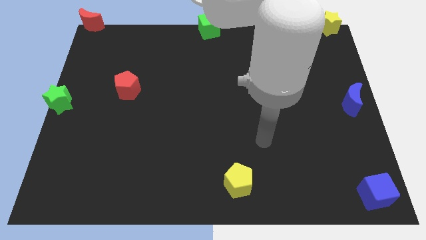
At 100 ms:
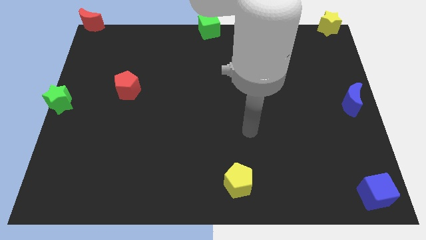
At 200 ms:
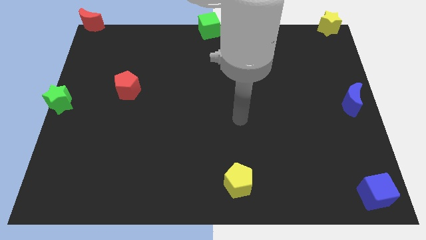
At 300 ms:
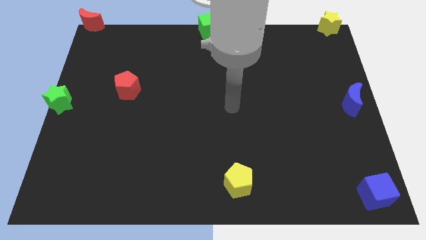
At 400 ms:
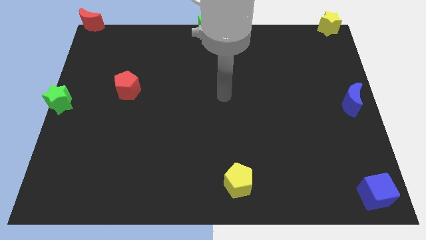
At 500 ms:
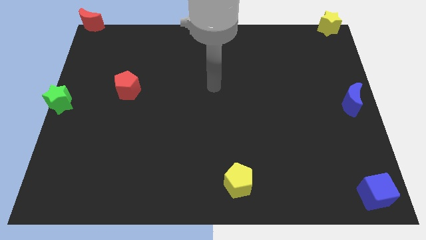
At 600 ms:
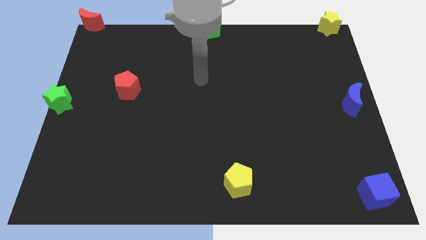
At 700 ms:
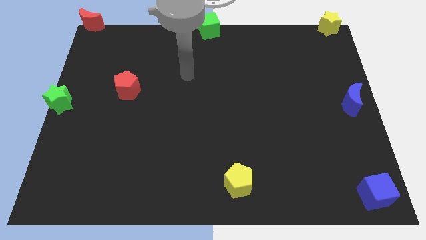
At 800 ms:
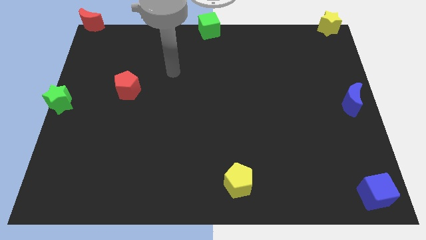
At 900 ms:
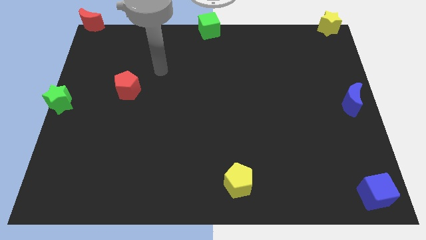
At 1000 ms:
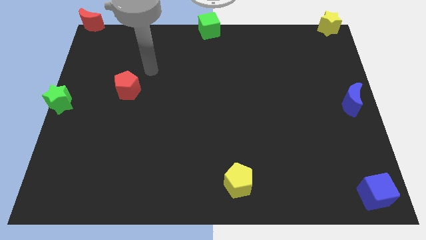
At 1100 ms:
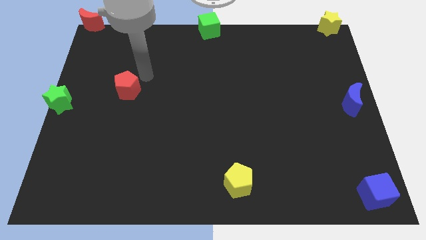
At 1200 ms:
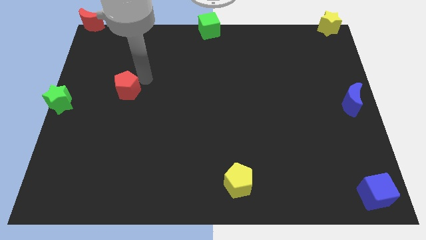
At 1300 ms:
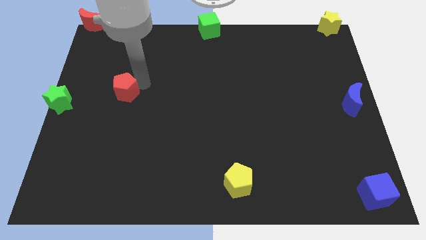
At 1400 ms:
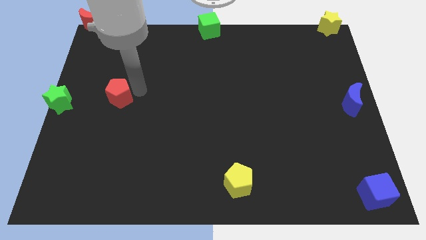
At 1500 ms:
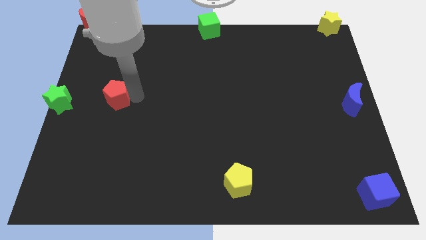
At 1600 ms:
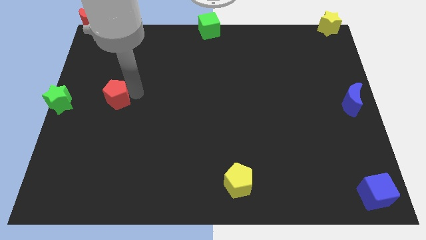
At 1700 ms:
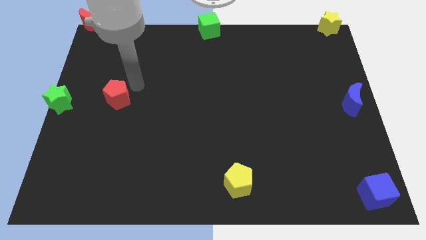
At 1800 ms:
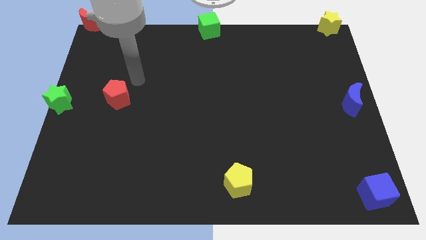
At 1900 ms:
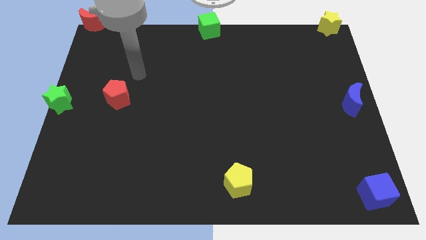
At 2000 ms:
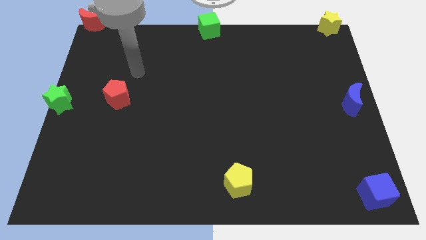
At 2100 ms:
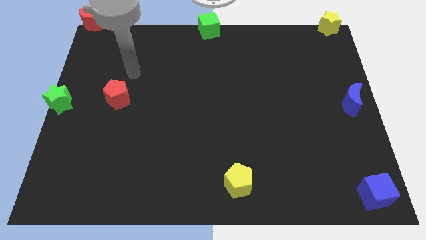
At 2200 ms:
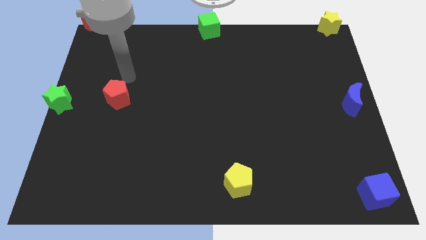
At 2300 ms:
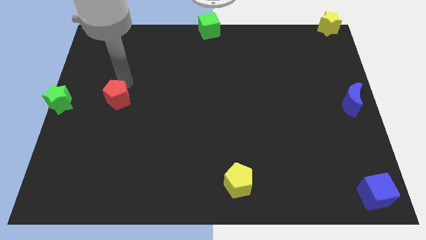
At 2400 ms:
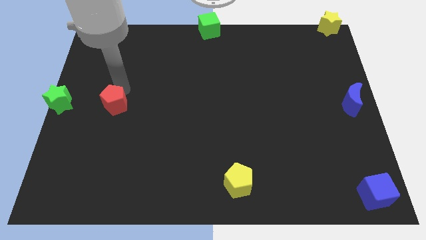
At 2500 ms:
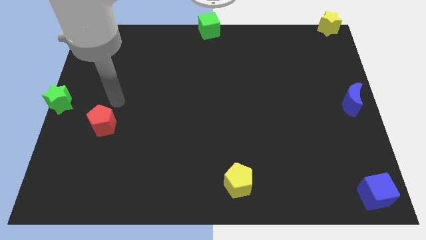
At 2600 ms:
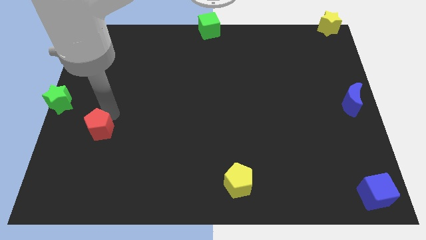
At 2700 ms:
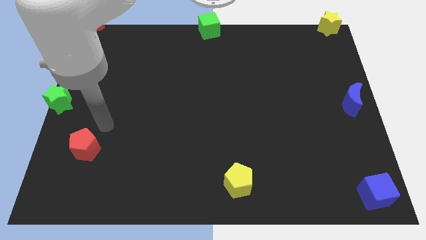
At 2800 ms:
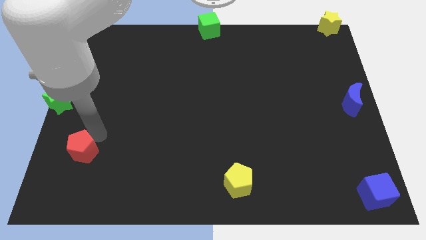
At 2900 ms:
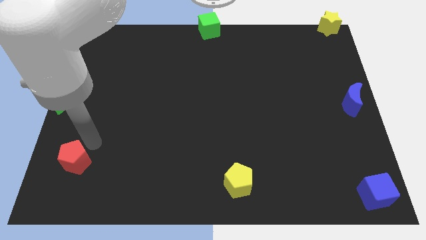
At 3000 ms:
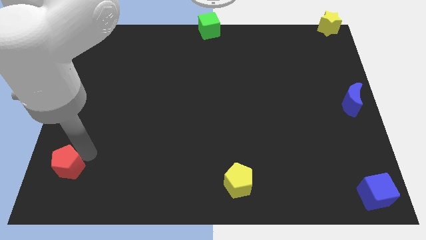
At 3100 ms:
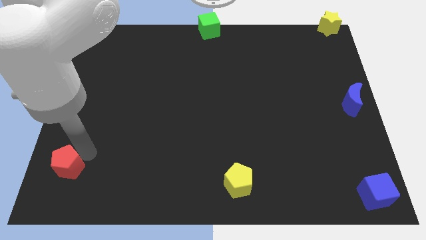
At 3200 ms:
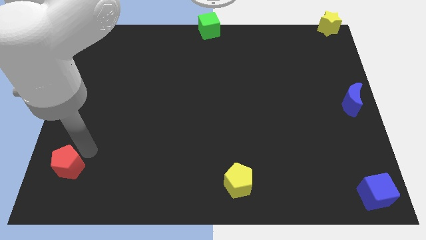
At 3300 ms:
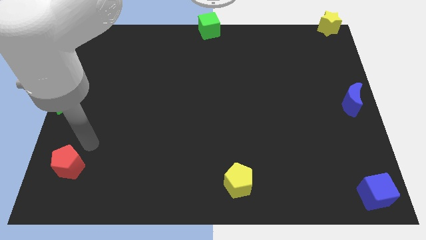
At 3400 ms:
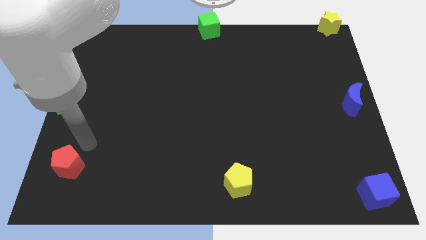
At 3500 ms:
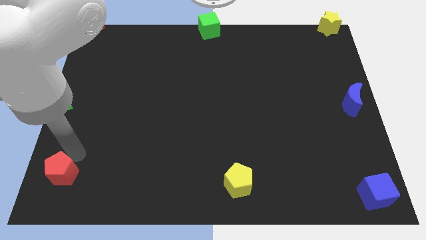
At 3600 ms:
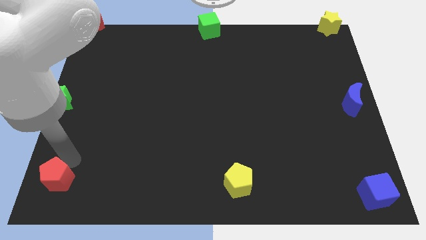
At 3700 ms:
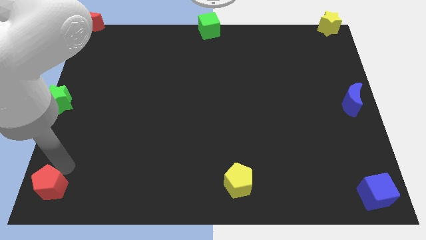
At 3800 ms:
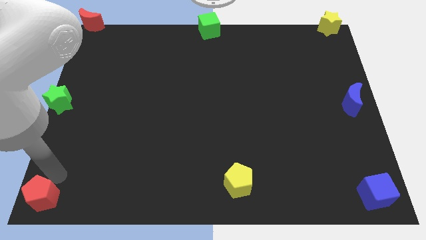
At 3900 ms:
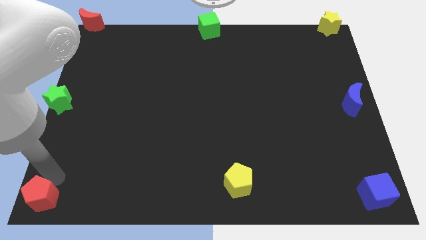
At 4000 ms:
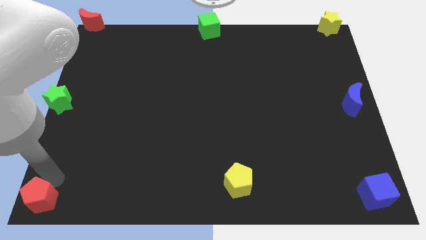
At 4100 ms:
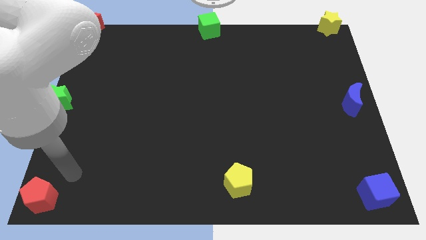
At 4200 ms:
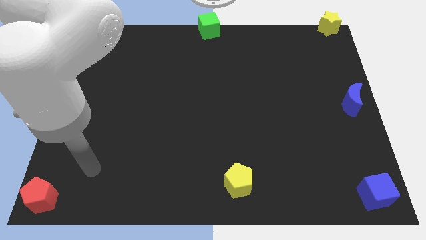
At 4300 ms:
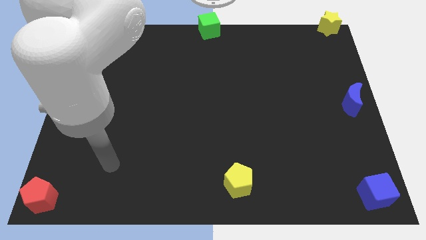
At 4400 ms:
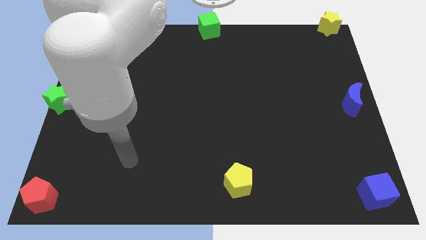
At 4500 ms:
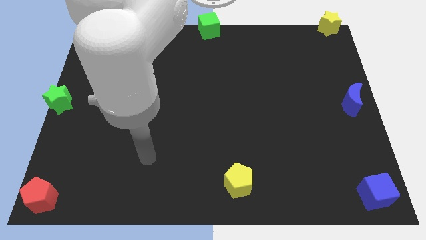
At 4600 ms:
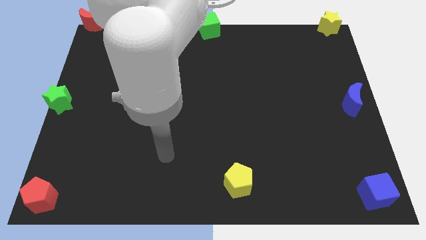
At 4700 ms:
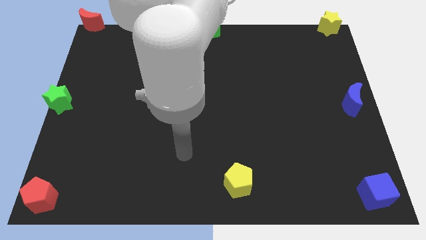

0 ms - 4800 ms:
move the red pentagon to the left bottom of the board

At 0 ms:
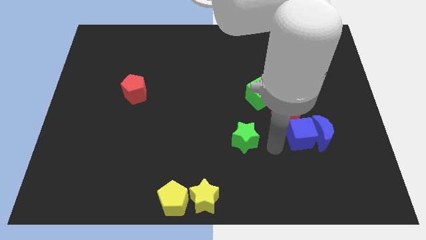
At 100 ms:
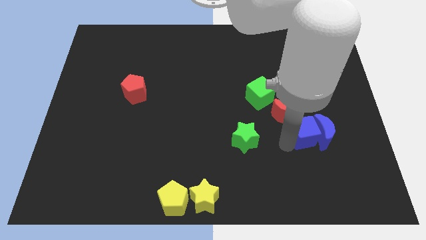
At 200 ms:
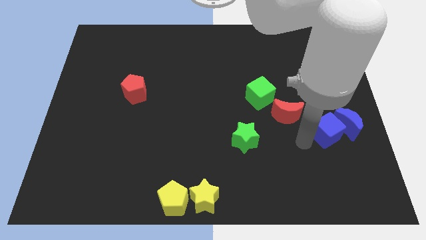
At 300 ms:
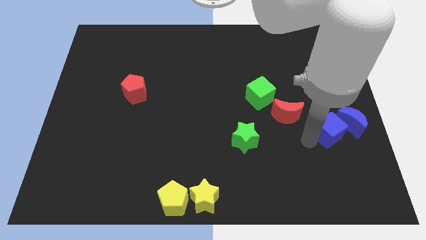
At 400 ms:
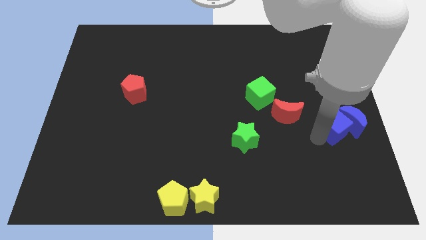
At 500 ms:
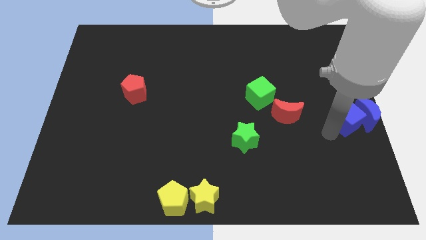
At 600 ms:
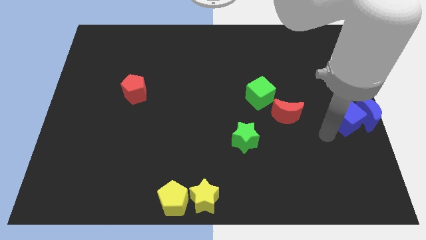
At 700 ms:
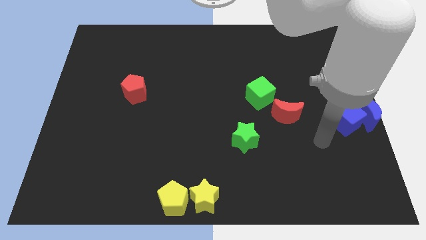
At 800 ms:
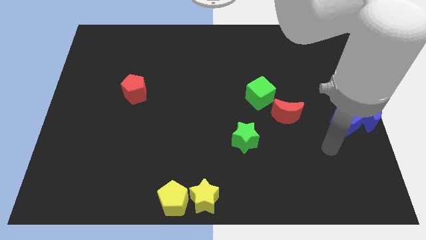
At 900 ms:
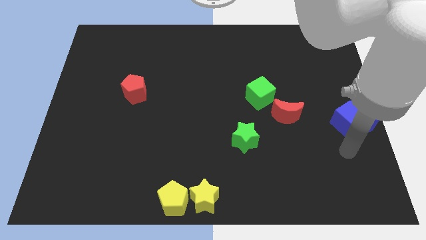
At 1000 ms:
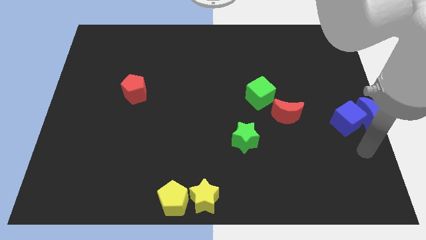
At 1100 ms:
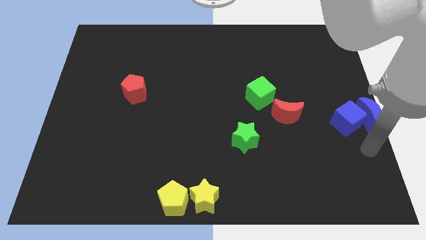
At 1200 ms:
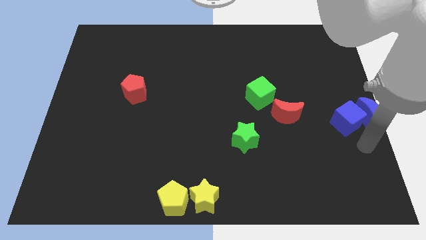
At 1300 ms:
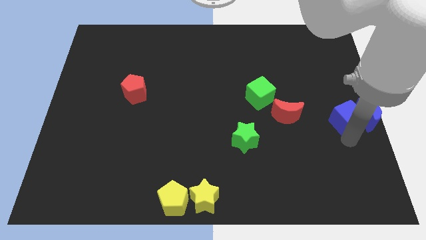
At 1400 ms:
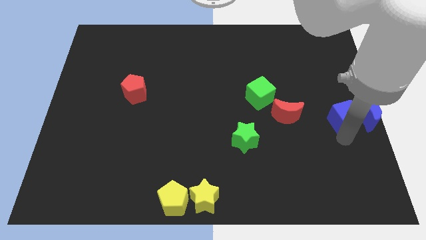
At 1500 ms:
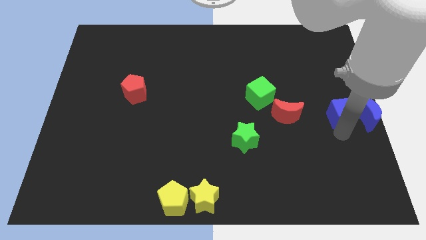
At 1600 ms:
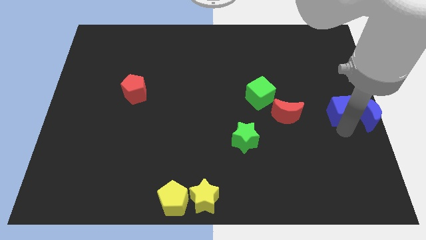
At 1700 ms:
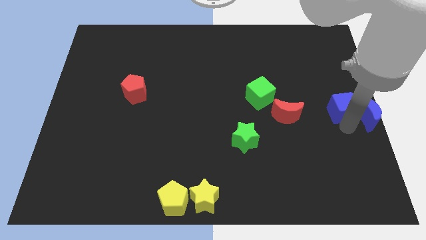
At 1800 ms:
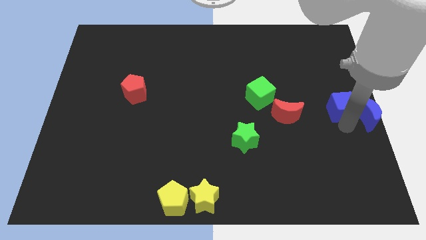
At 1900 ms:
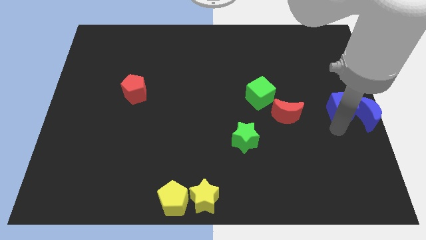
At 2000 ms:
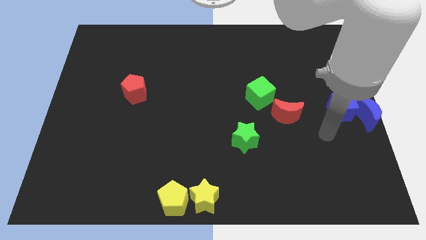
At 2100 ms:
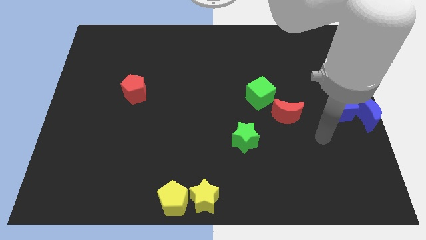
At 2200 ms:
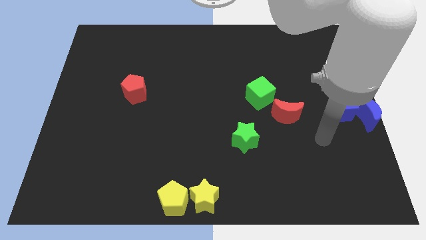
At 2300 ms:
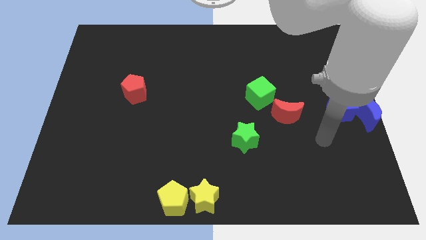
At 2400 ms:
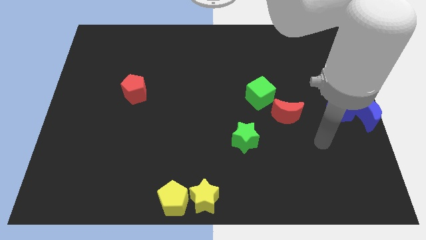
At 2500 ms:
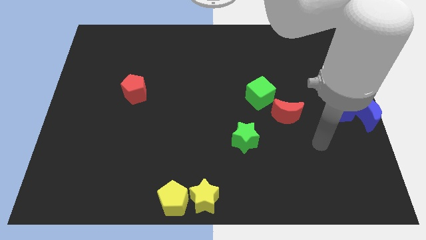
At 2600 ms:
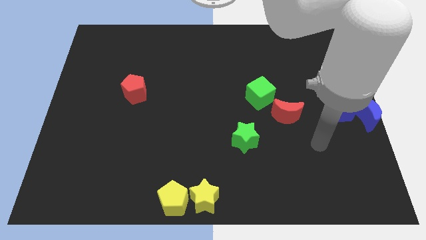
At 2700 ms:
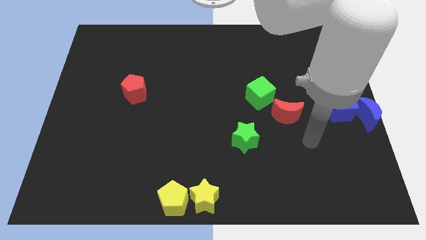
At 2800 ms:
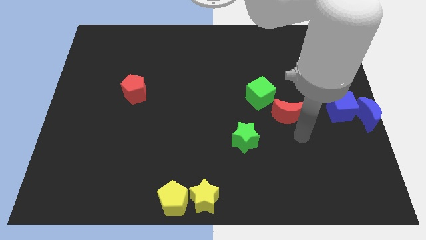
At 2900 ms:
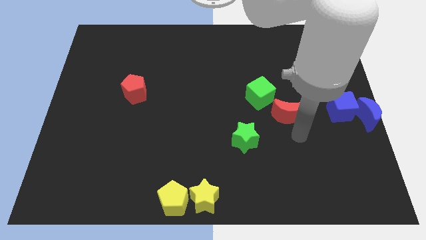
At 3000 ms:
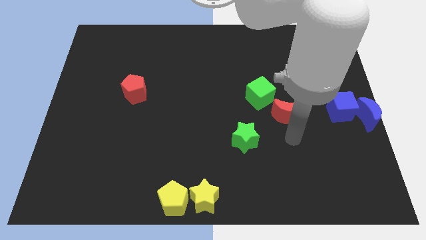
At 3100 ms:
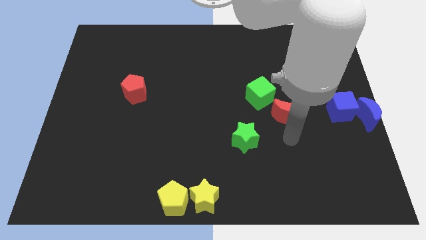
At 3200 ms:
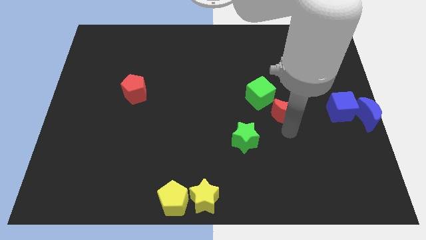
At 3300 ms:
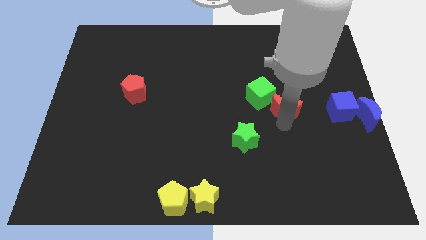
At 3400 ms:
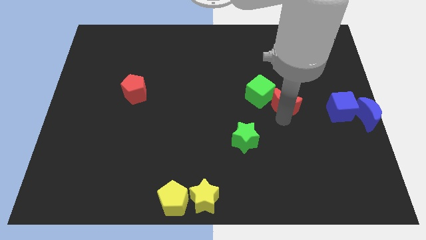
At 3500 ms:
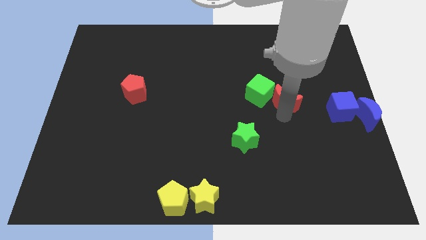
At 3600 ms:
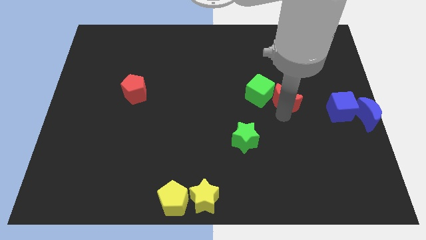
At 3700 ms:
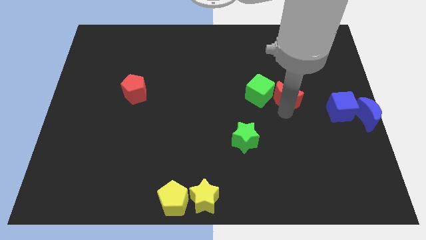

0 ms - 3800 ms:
move the red moon to the right side of the green cube

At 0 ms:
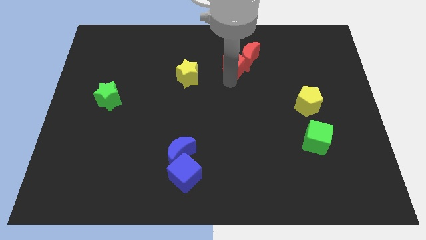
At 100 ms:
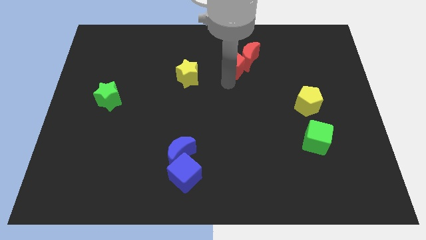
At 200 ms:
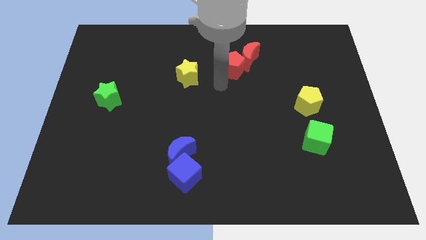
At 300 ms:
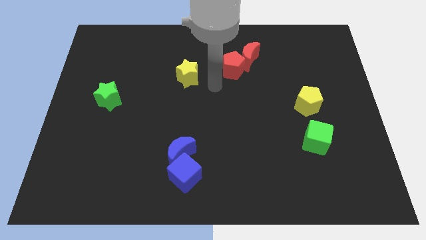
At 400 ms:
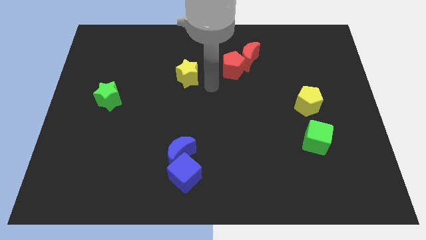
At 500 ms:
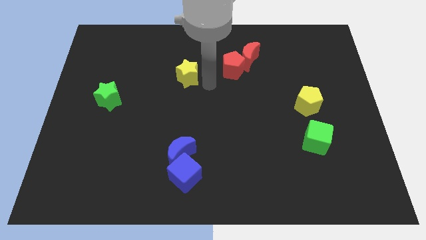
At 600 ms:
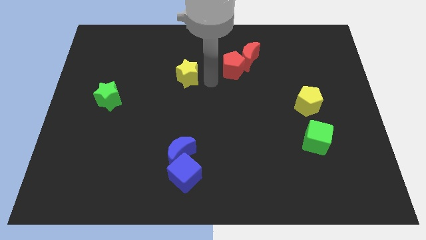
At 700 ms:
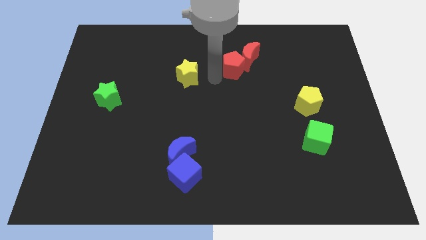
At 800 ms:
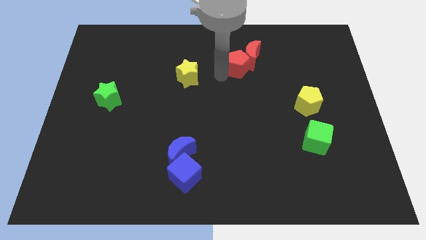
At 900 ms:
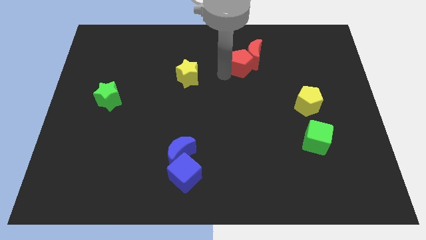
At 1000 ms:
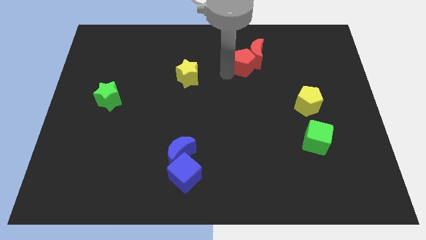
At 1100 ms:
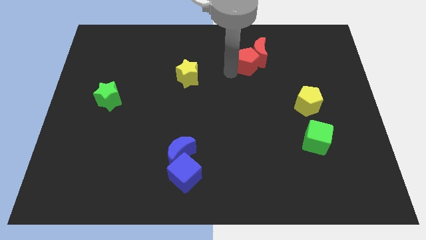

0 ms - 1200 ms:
push the red pentagon along with the red crescent slightly upwards
